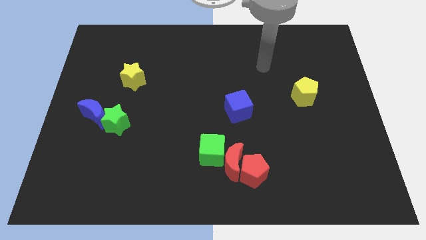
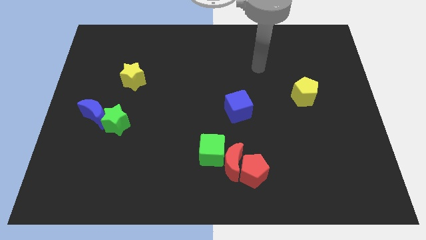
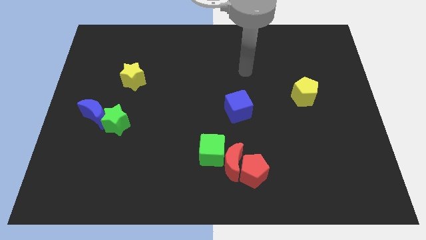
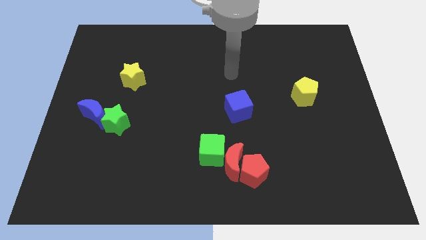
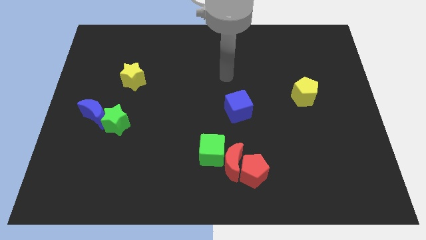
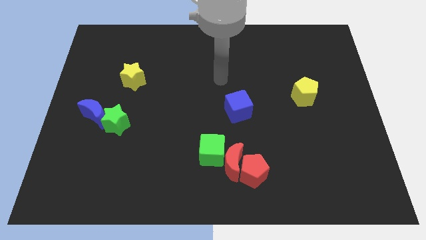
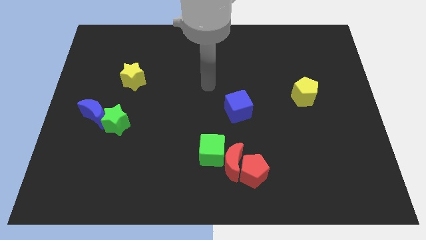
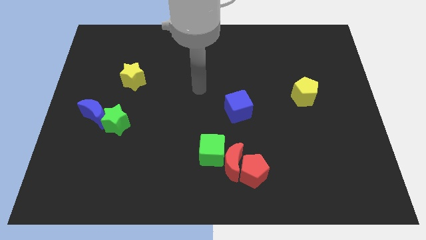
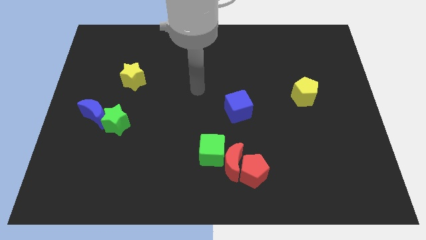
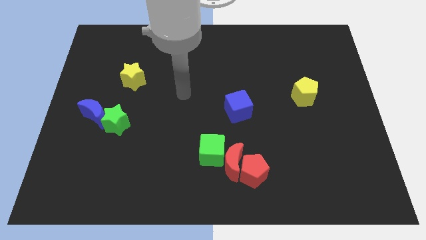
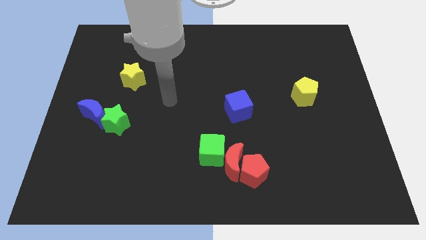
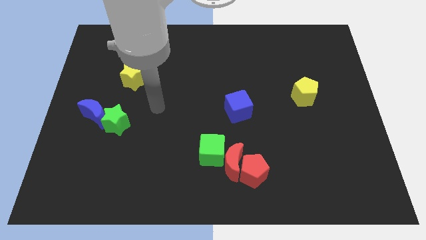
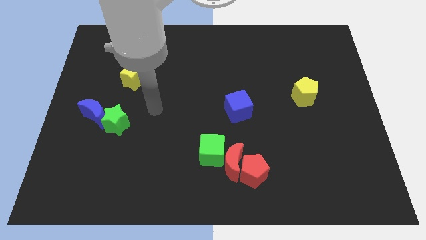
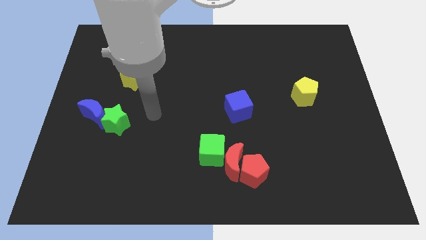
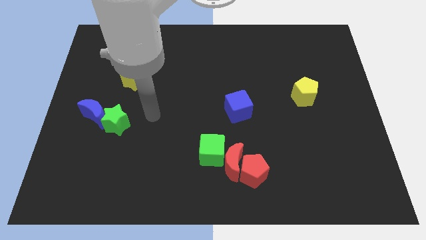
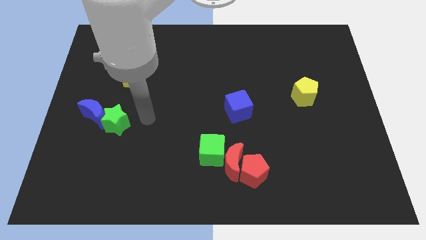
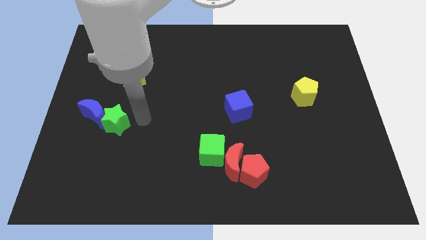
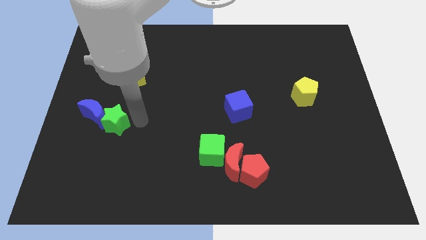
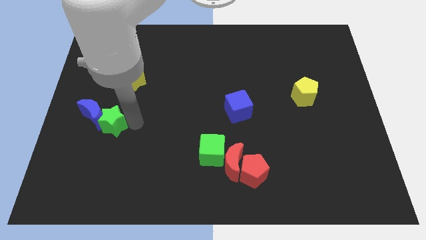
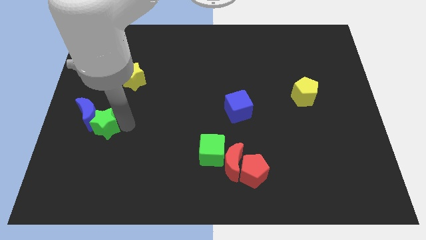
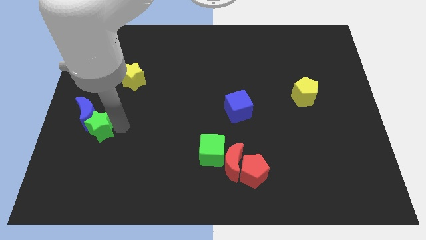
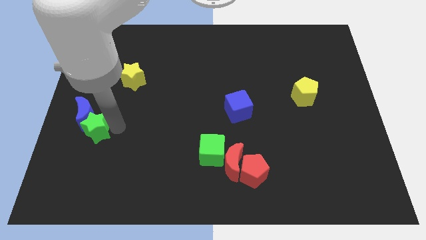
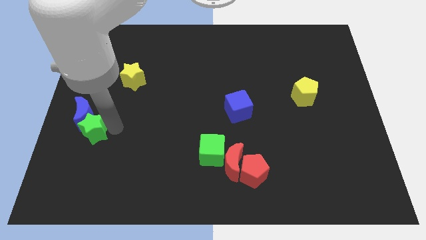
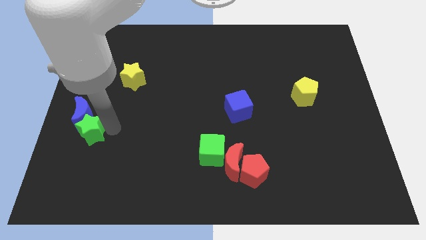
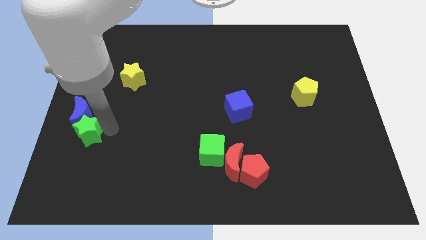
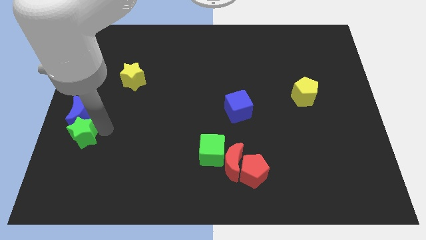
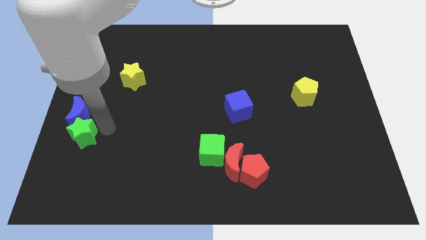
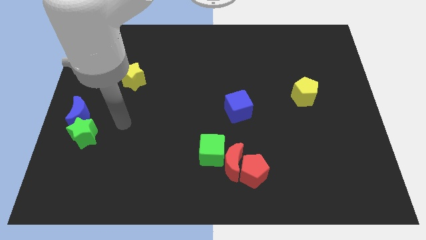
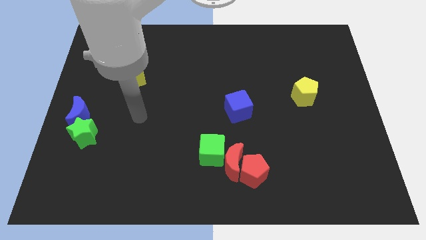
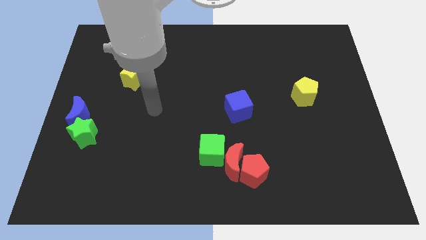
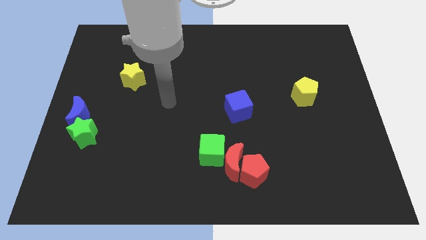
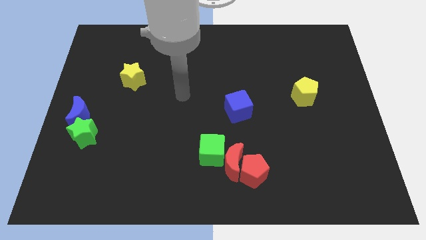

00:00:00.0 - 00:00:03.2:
push the green star into the blue crescent

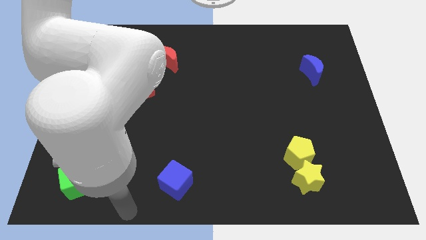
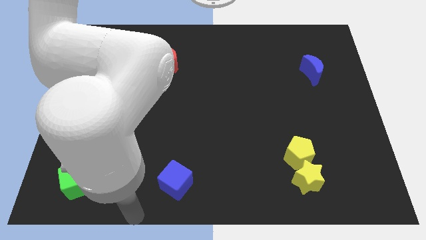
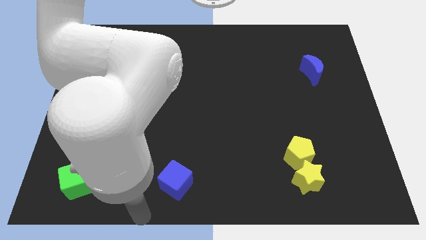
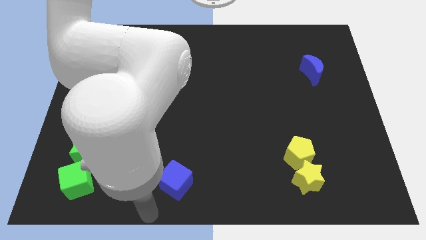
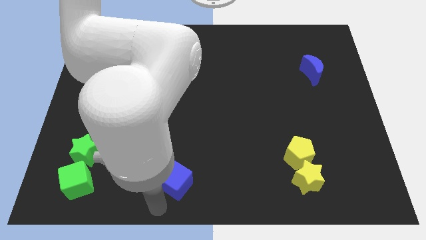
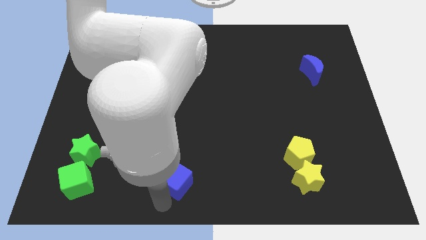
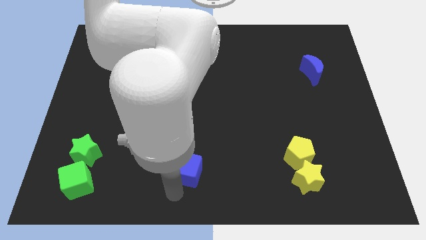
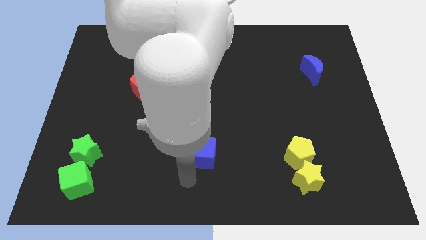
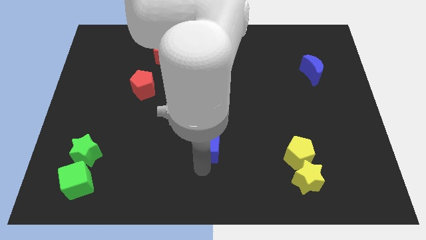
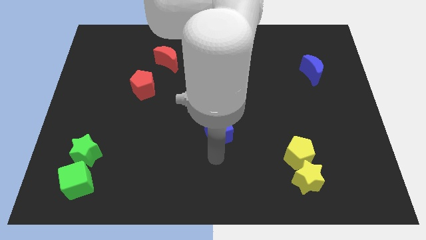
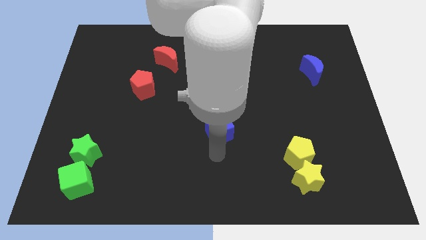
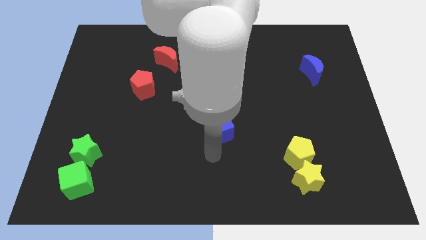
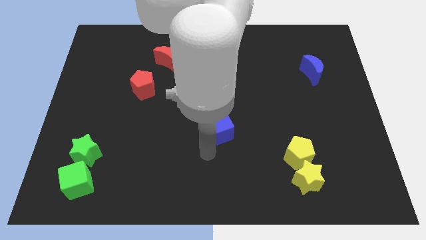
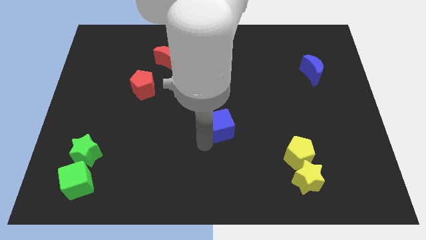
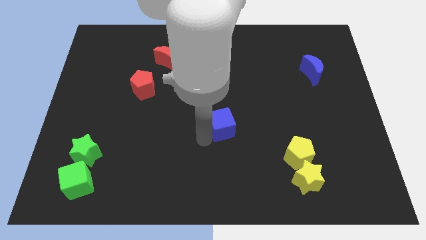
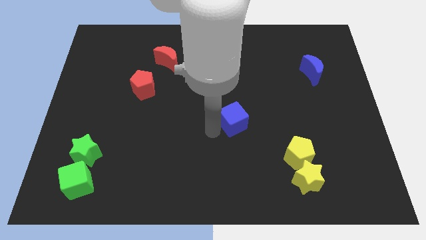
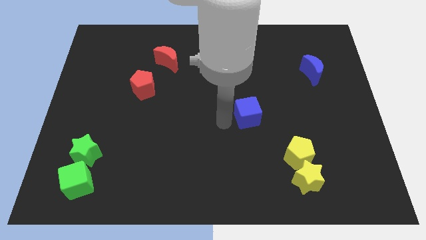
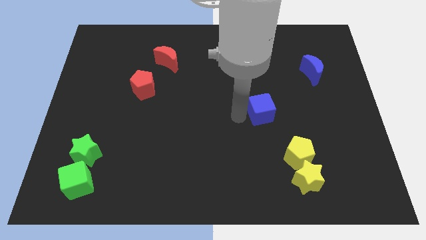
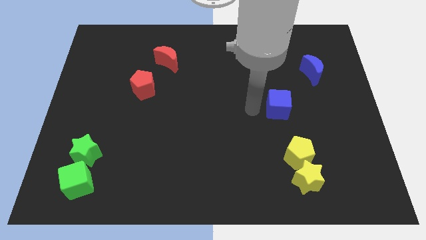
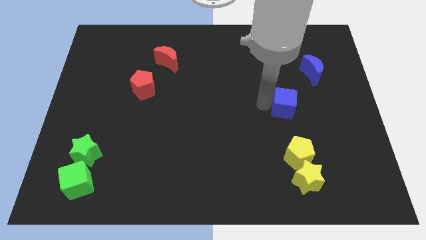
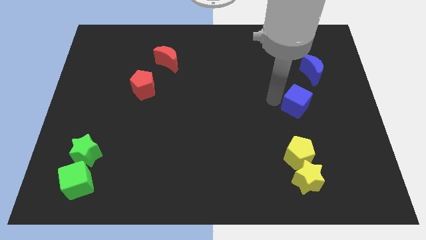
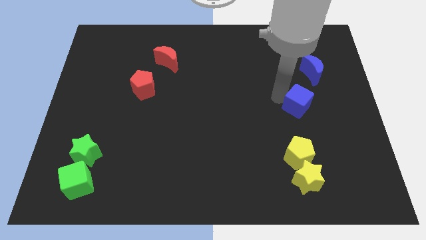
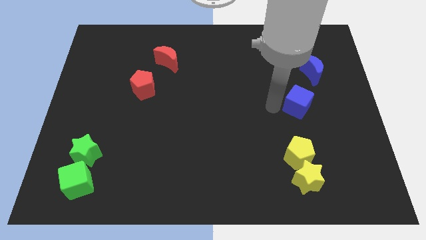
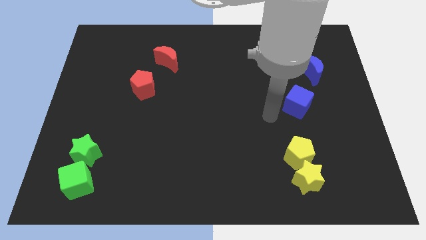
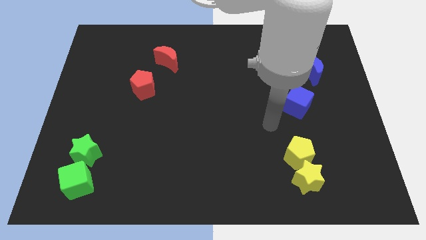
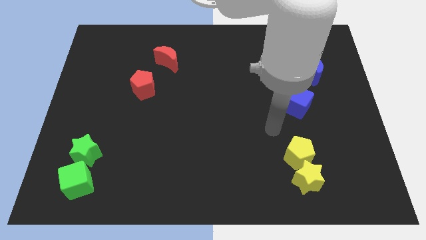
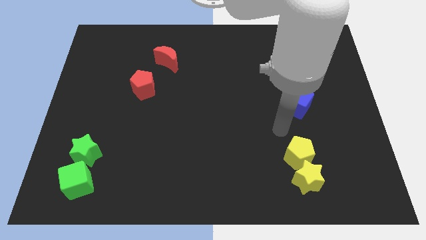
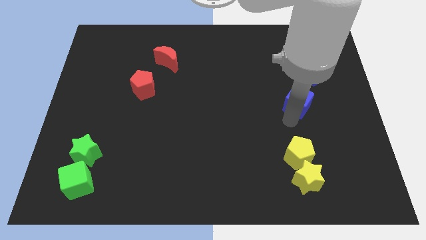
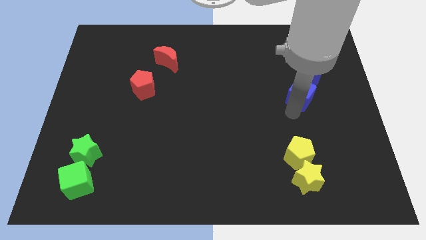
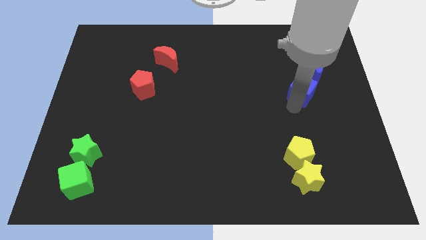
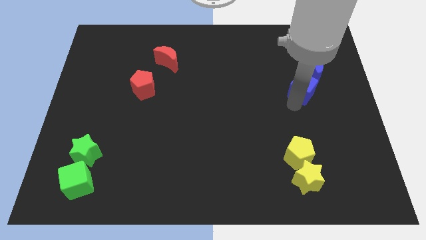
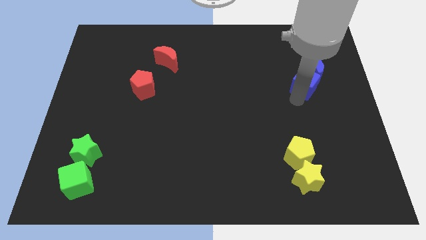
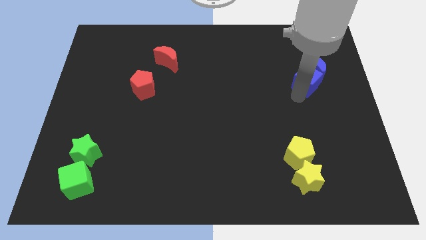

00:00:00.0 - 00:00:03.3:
move the blue cube into the blue crescent

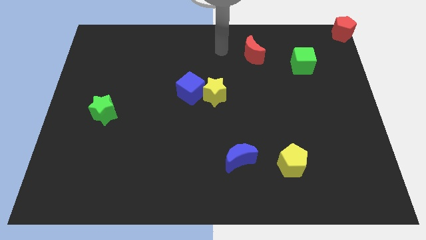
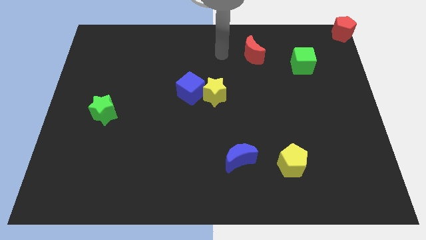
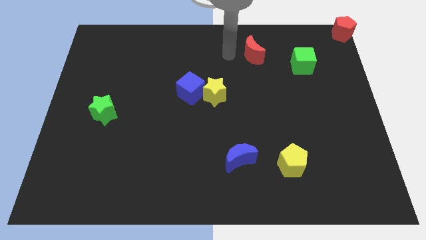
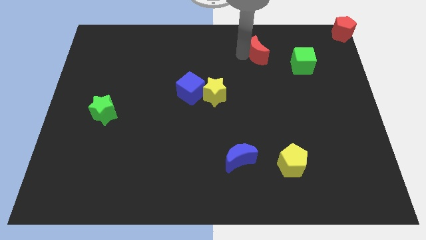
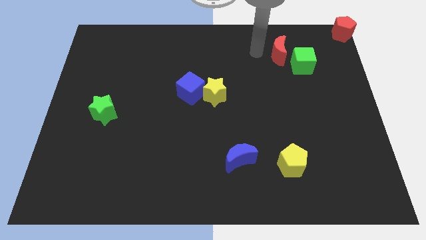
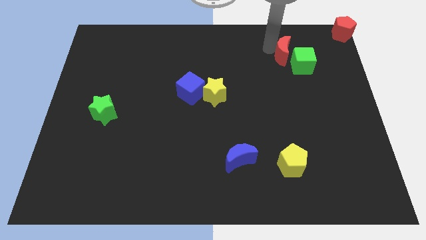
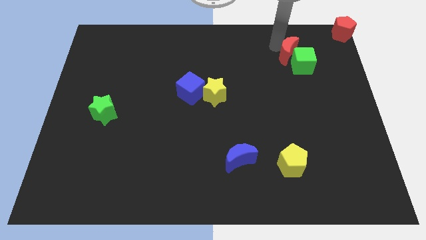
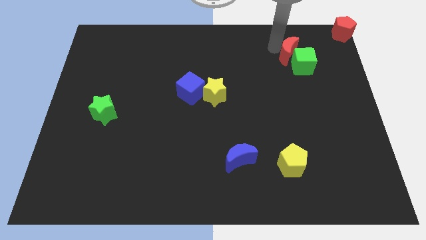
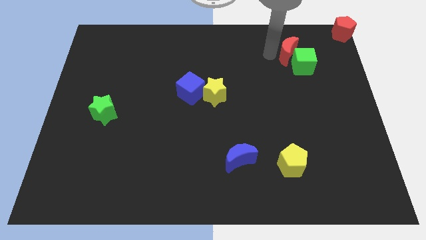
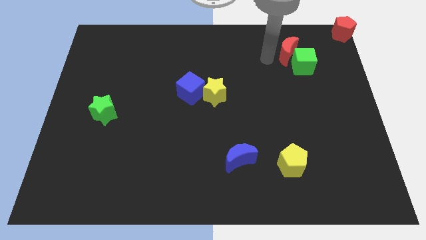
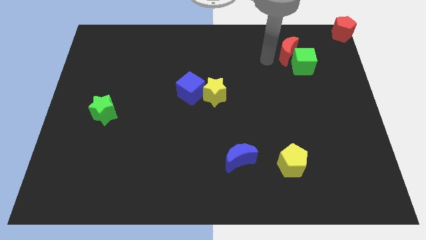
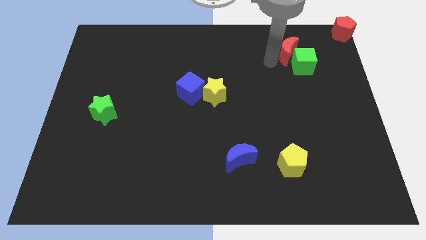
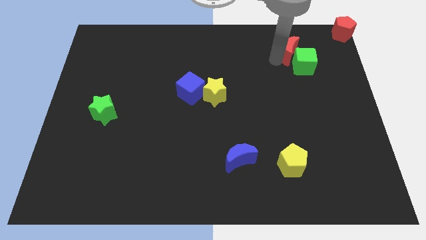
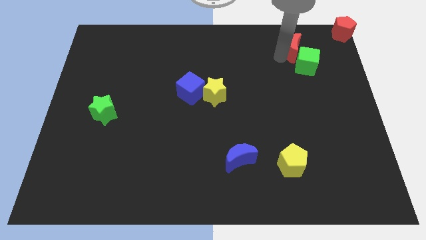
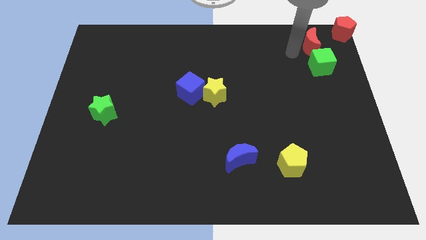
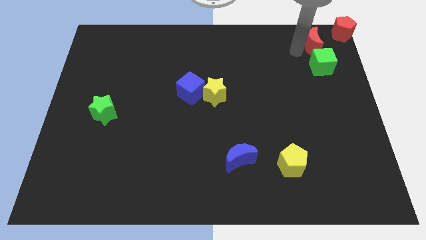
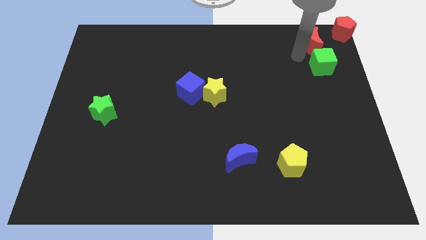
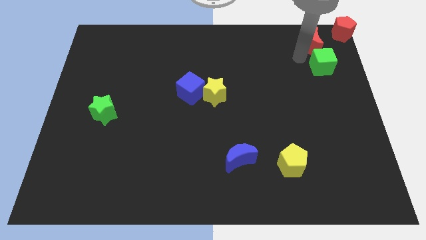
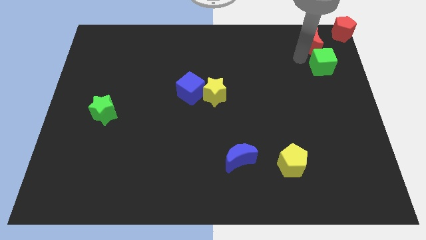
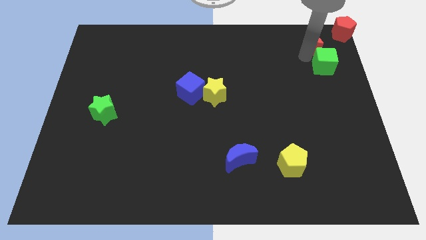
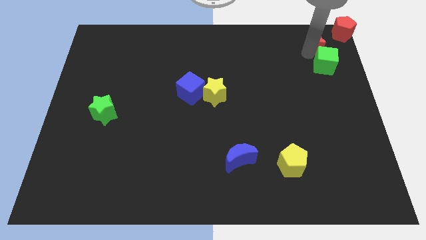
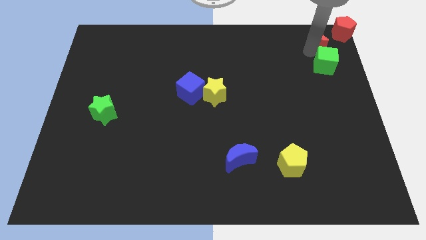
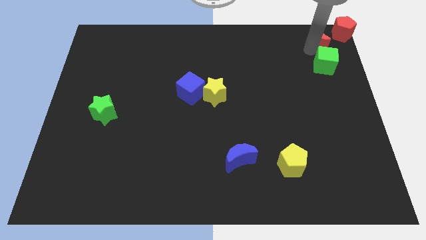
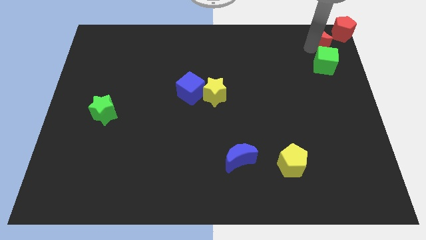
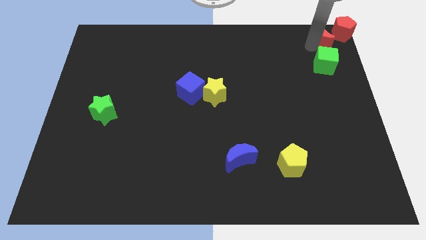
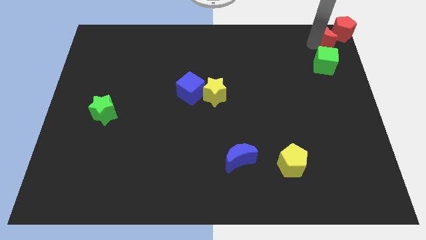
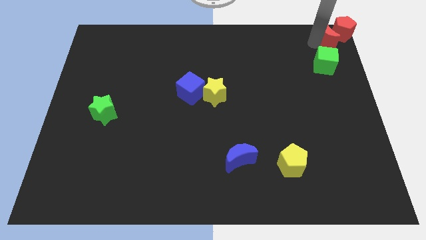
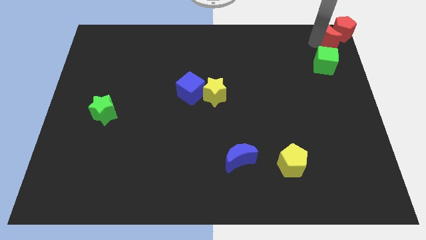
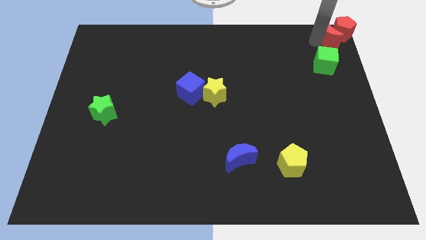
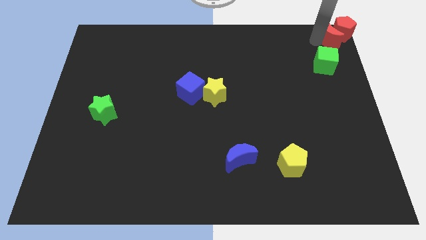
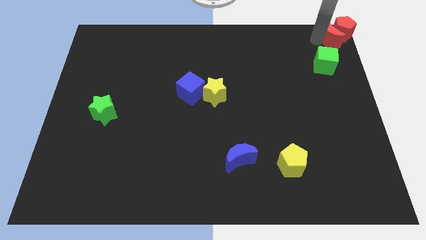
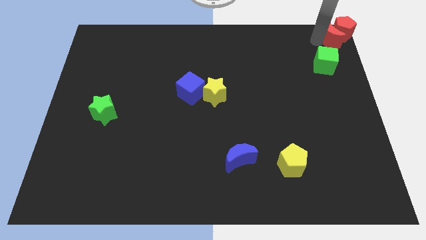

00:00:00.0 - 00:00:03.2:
move red moon into the red pentagon
